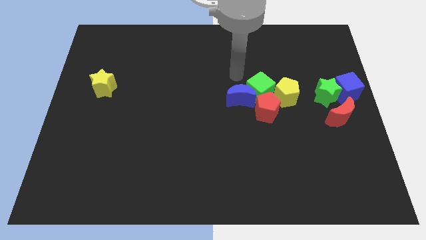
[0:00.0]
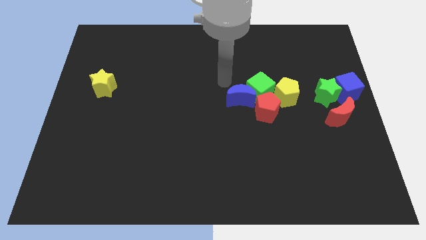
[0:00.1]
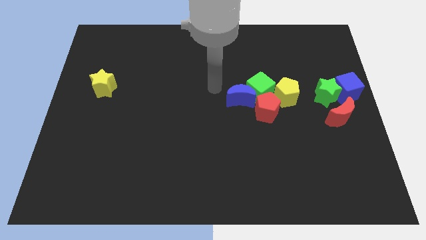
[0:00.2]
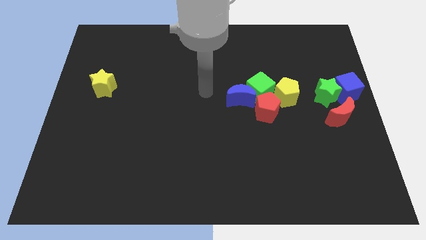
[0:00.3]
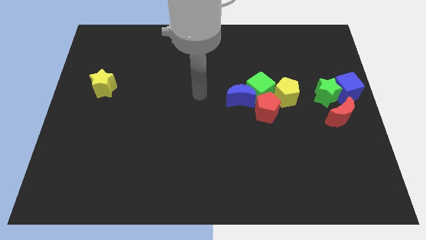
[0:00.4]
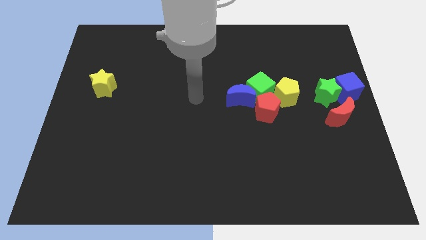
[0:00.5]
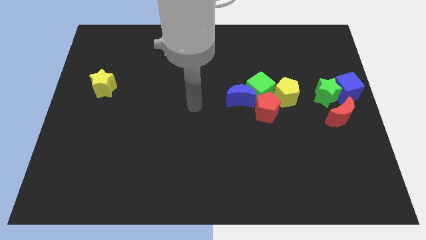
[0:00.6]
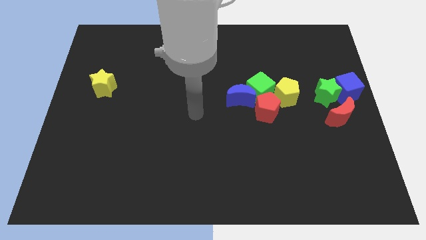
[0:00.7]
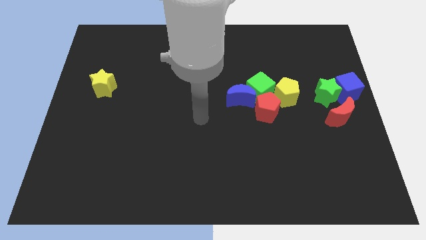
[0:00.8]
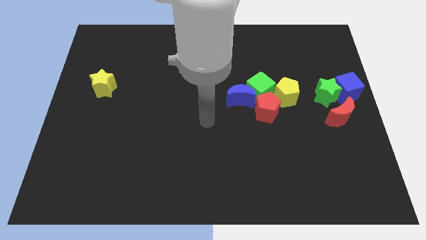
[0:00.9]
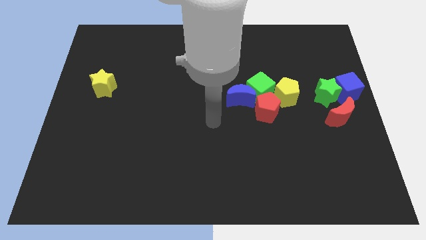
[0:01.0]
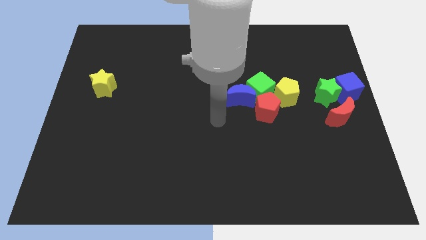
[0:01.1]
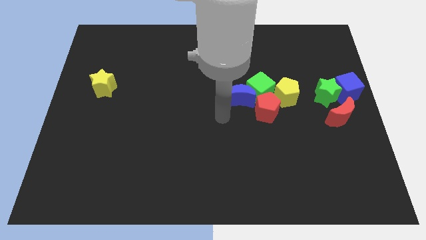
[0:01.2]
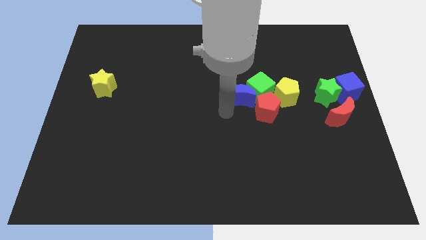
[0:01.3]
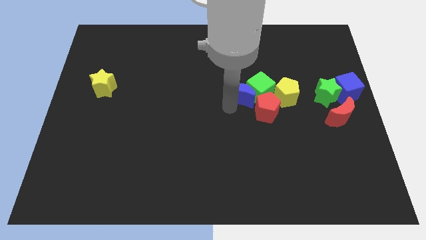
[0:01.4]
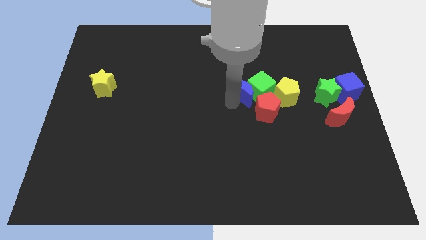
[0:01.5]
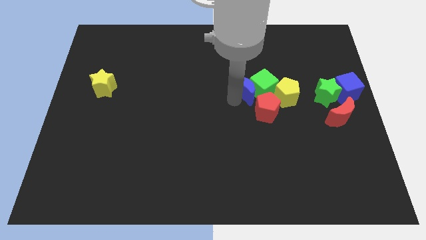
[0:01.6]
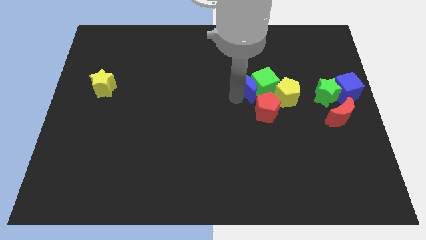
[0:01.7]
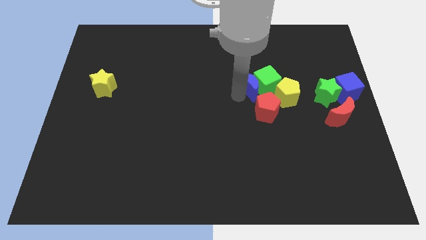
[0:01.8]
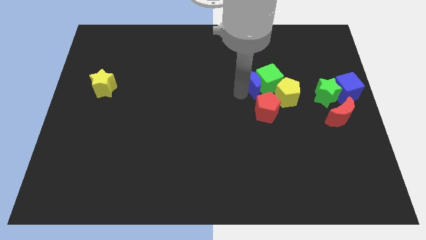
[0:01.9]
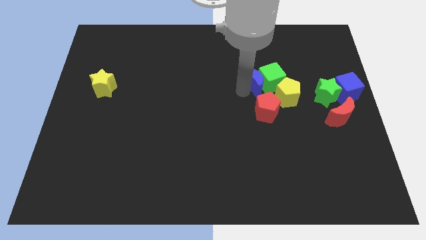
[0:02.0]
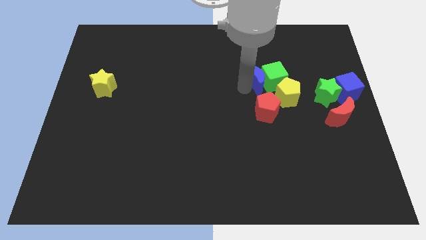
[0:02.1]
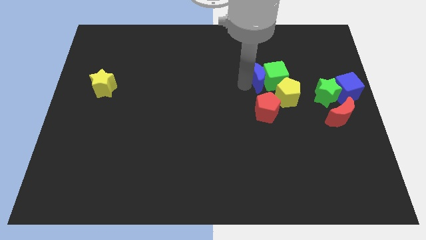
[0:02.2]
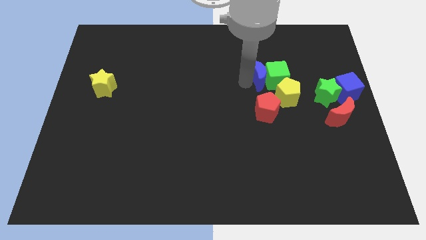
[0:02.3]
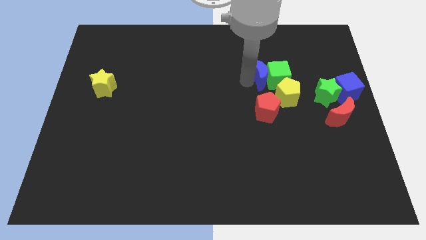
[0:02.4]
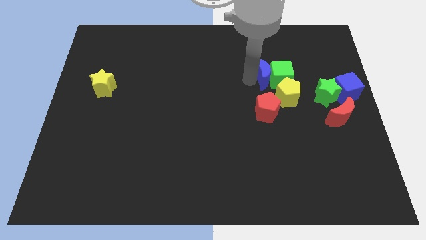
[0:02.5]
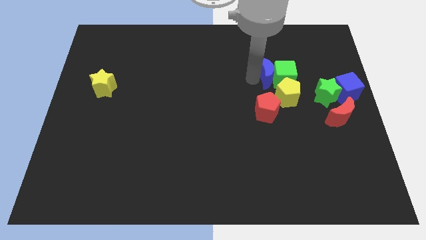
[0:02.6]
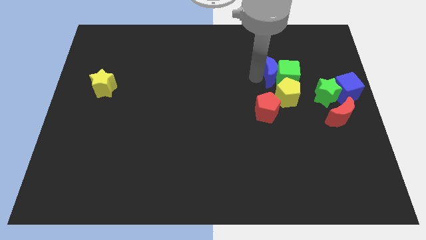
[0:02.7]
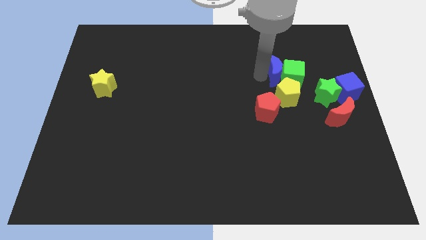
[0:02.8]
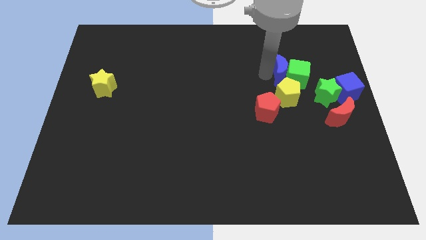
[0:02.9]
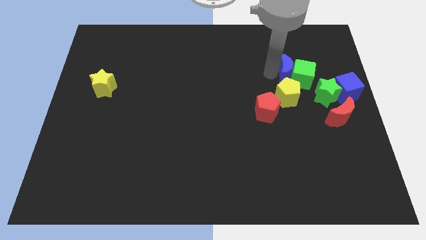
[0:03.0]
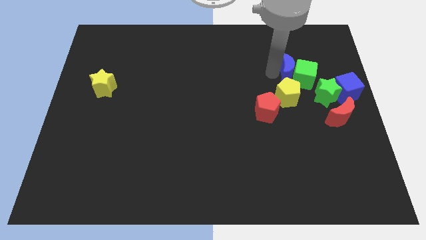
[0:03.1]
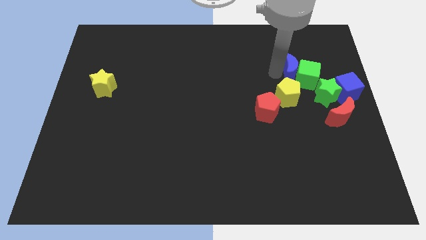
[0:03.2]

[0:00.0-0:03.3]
push the green cube and blue moon to the top side of the yellow pentagon

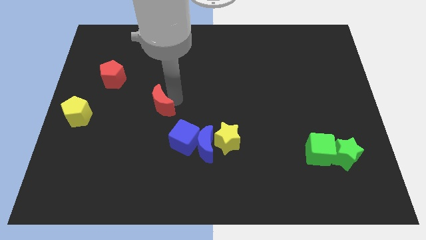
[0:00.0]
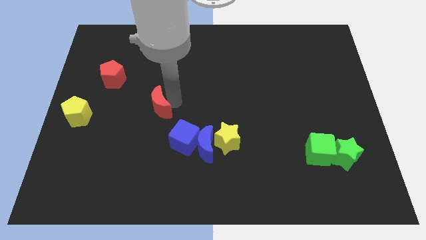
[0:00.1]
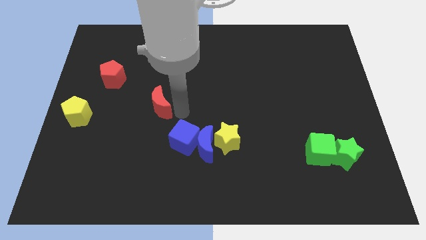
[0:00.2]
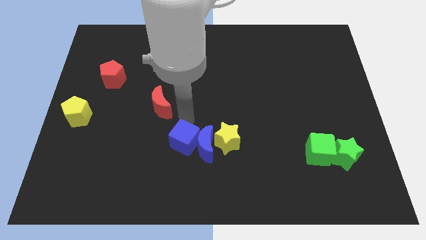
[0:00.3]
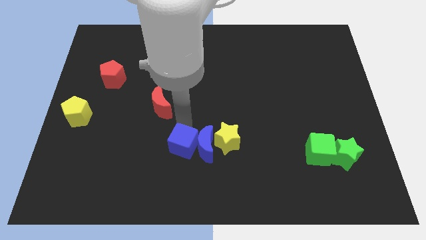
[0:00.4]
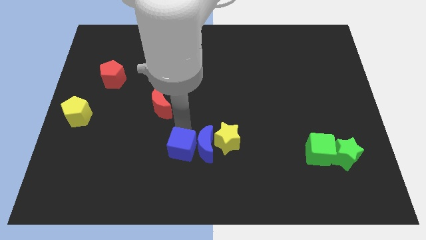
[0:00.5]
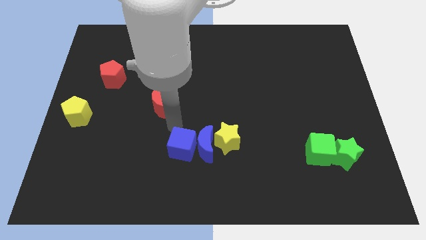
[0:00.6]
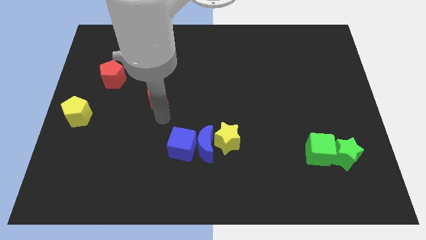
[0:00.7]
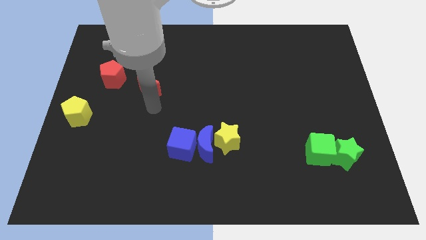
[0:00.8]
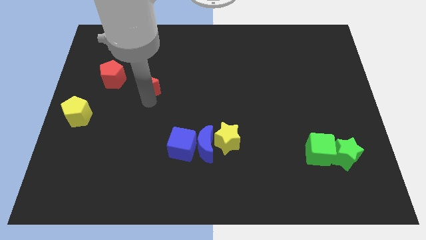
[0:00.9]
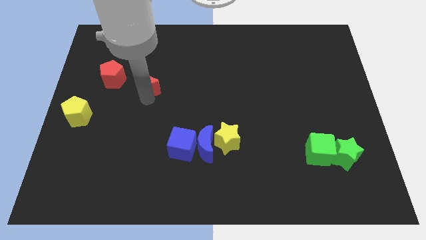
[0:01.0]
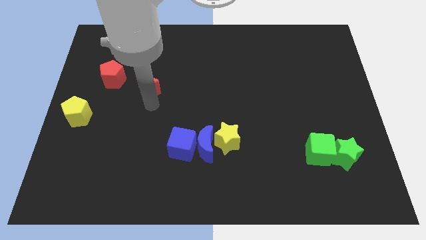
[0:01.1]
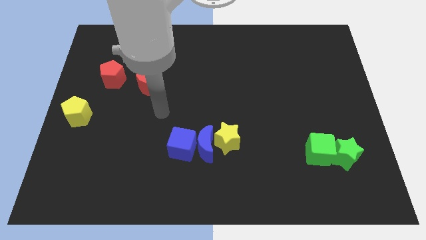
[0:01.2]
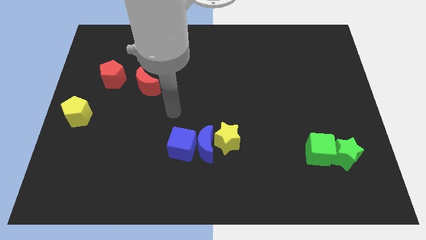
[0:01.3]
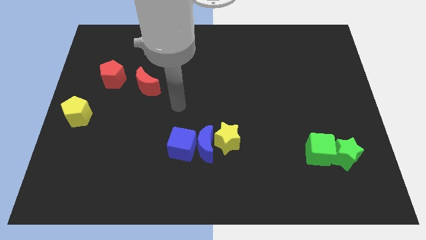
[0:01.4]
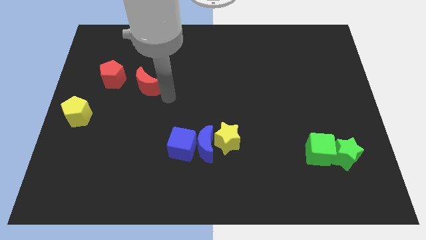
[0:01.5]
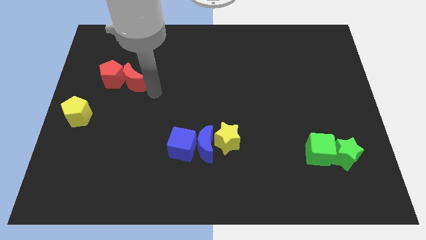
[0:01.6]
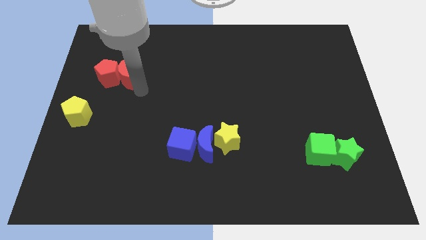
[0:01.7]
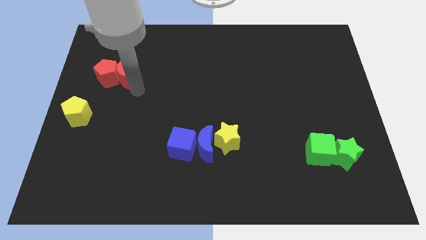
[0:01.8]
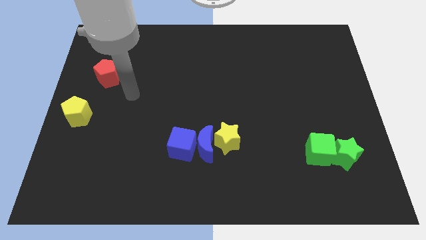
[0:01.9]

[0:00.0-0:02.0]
move the red crescent to the right of the red pentagon

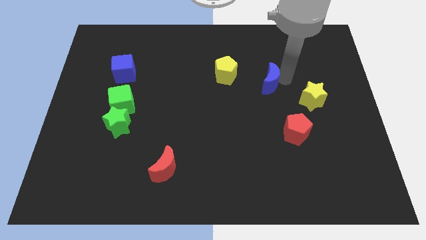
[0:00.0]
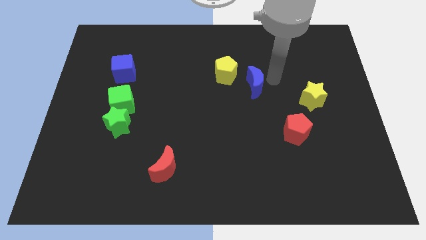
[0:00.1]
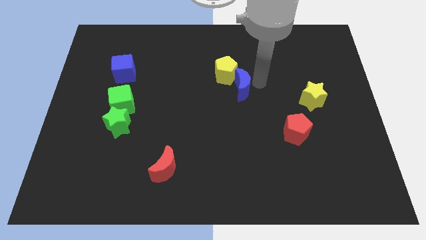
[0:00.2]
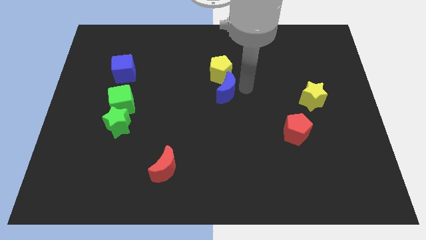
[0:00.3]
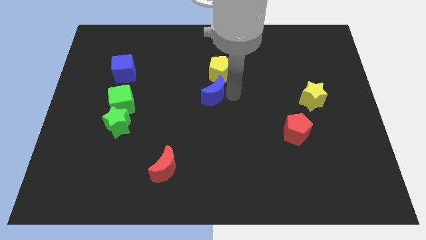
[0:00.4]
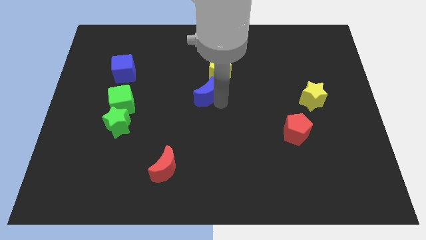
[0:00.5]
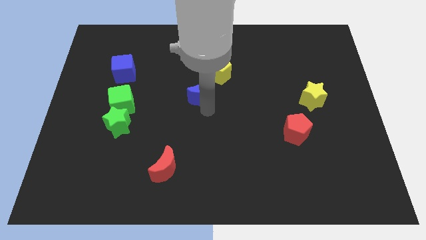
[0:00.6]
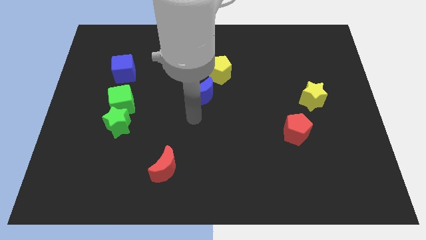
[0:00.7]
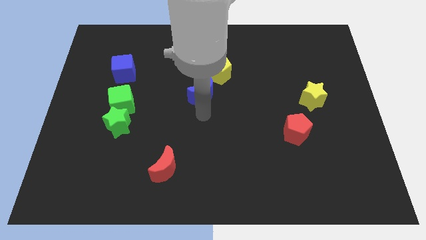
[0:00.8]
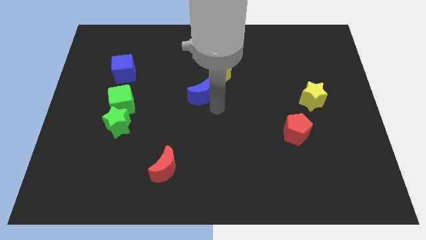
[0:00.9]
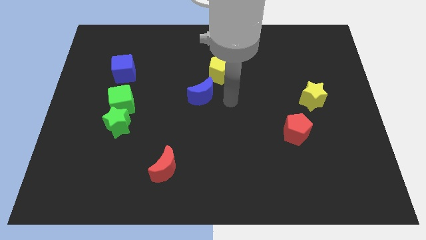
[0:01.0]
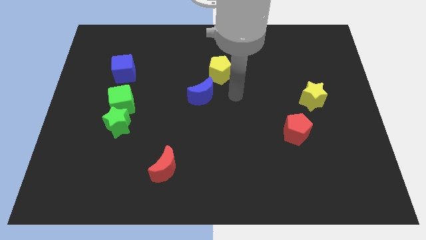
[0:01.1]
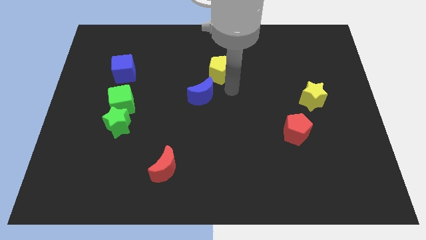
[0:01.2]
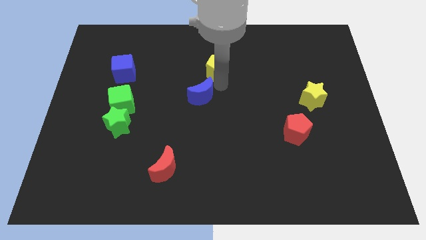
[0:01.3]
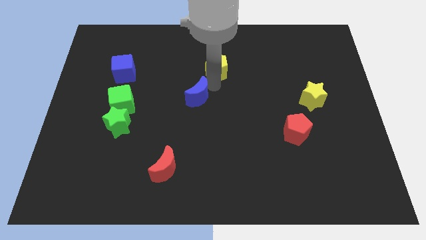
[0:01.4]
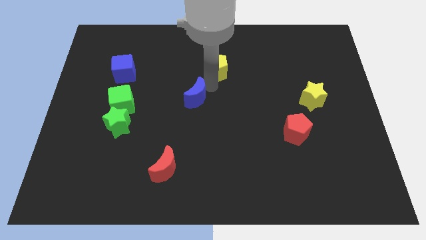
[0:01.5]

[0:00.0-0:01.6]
move the blue crescent towards the center of the board

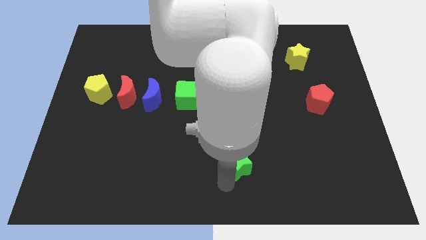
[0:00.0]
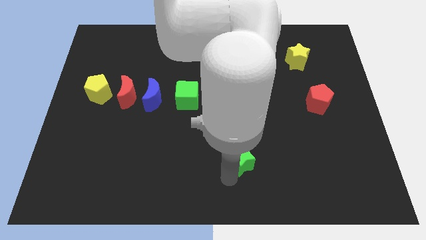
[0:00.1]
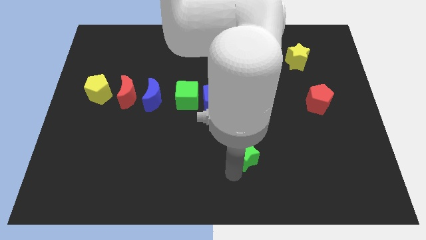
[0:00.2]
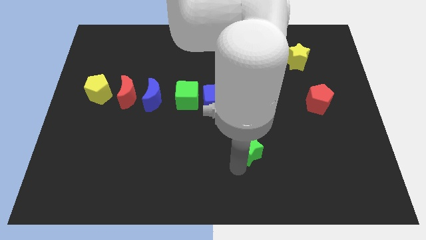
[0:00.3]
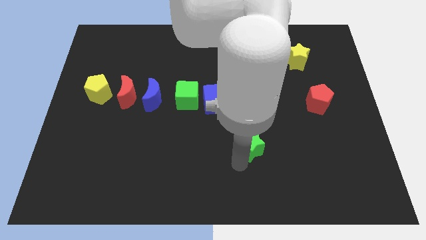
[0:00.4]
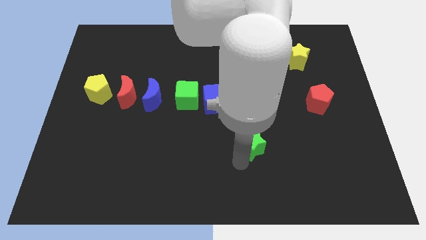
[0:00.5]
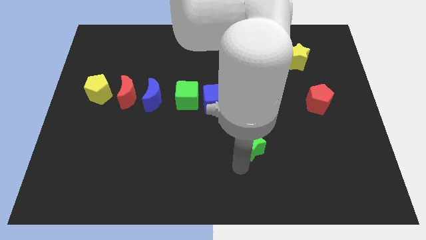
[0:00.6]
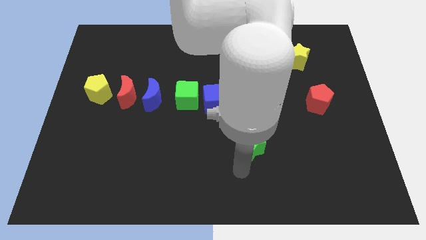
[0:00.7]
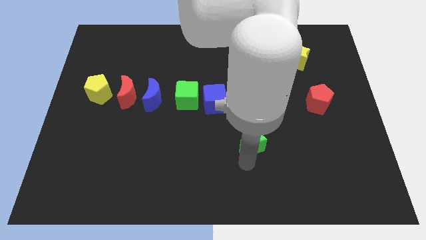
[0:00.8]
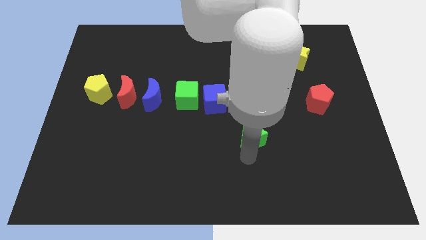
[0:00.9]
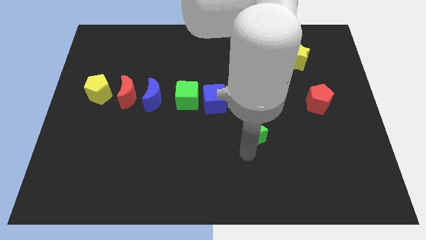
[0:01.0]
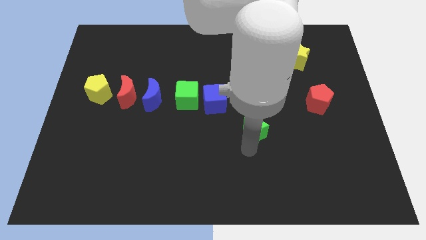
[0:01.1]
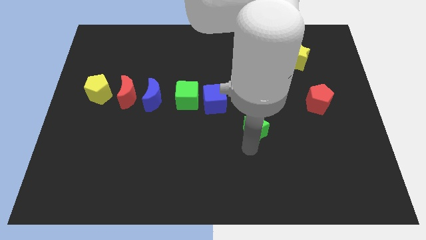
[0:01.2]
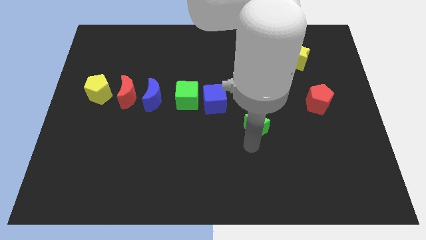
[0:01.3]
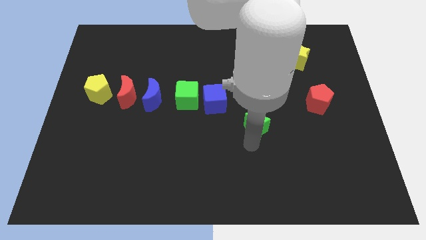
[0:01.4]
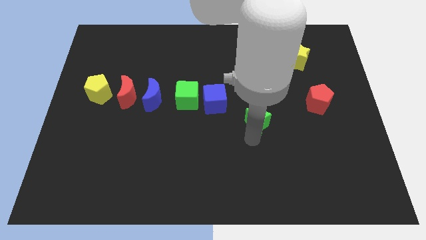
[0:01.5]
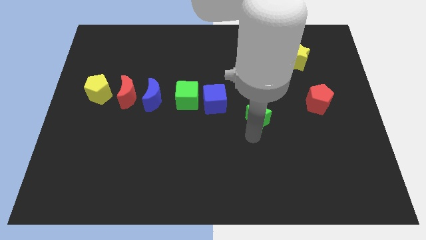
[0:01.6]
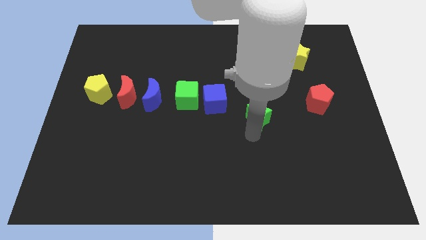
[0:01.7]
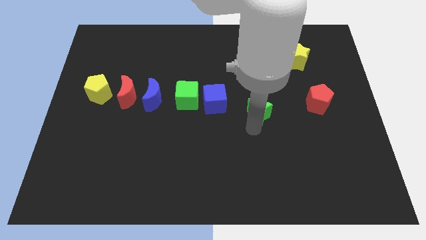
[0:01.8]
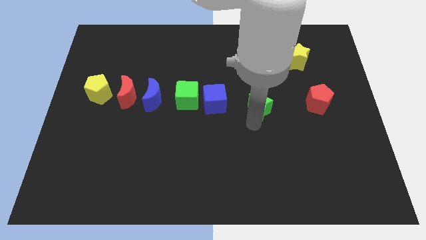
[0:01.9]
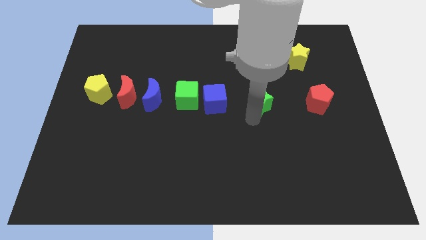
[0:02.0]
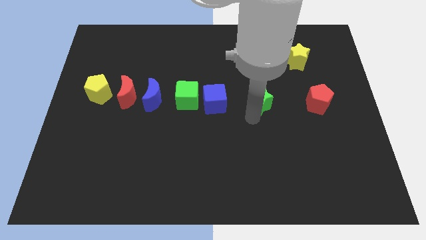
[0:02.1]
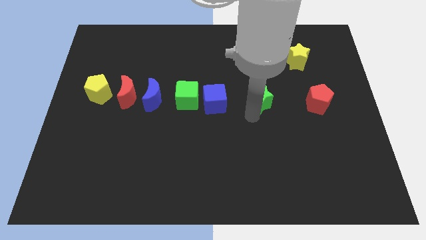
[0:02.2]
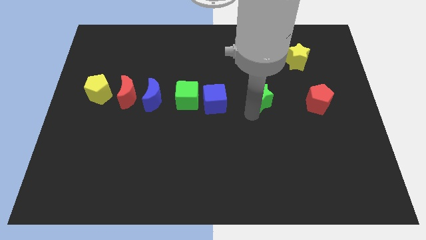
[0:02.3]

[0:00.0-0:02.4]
move the green star to the right of the blue cube
